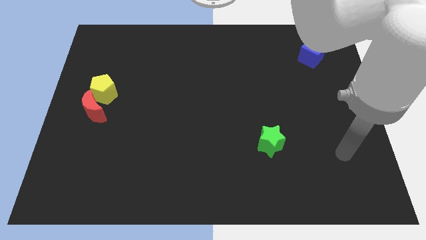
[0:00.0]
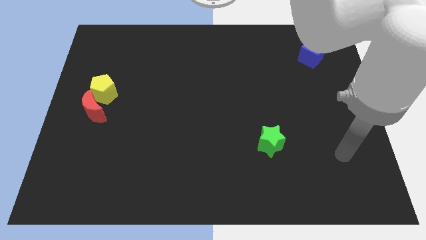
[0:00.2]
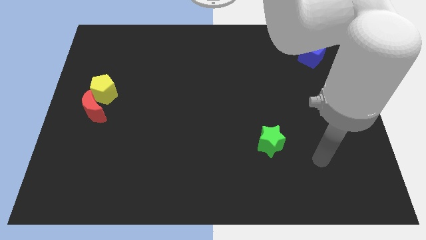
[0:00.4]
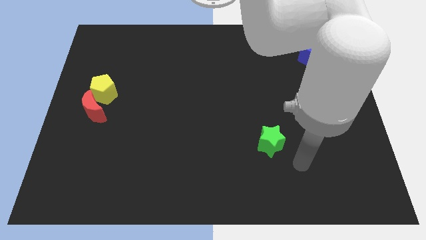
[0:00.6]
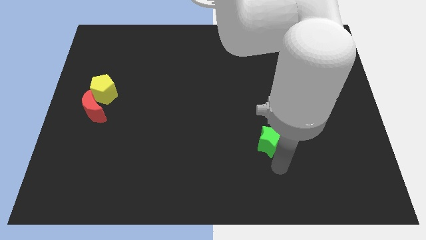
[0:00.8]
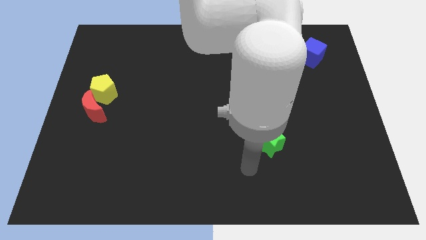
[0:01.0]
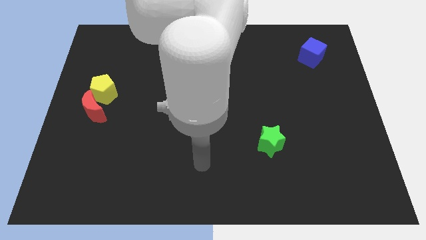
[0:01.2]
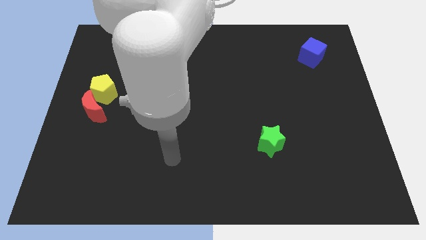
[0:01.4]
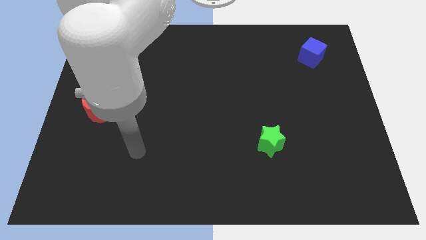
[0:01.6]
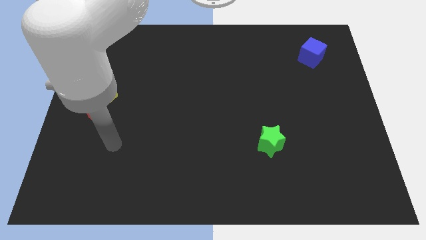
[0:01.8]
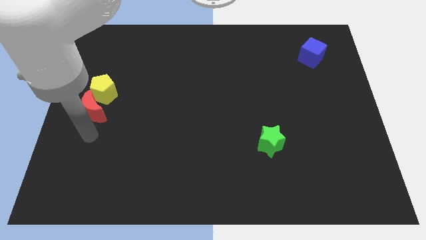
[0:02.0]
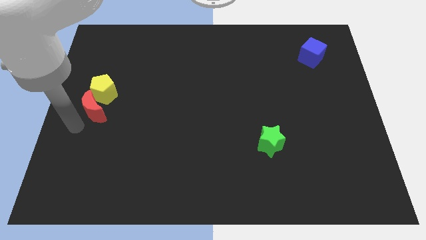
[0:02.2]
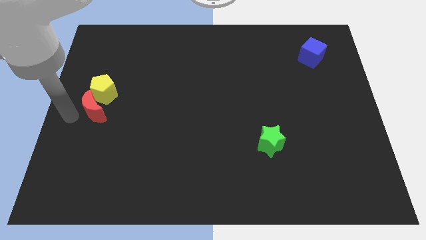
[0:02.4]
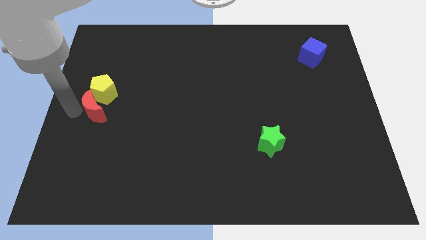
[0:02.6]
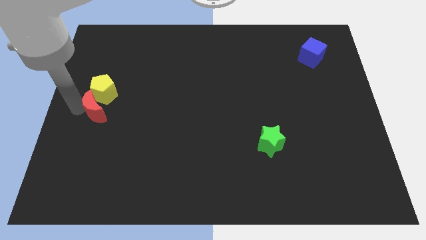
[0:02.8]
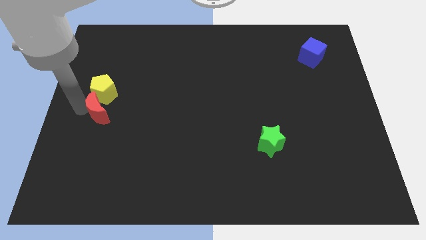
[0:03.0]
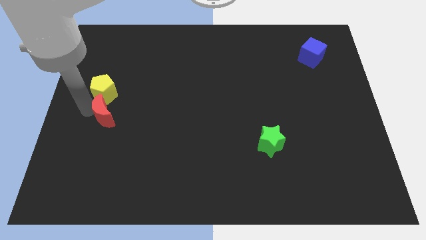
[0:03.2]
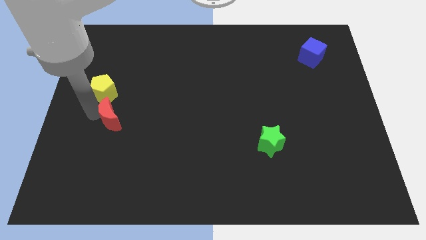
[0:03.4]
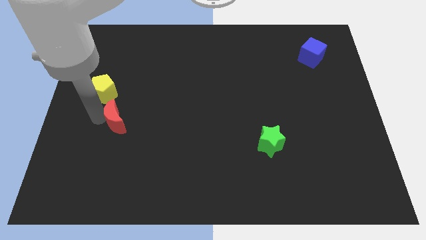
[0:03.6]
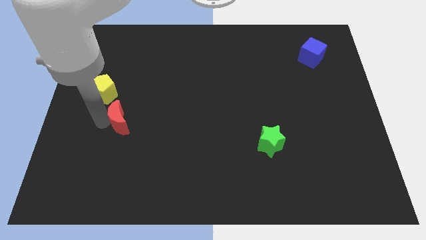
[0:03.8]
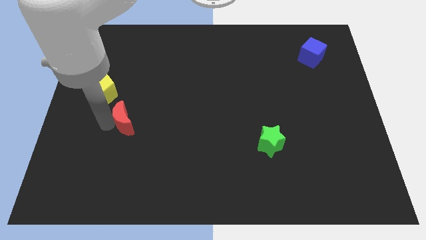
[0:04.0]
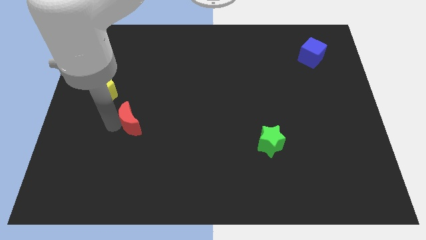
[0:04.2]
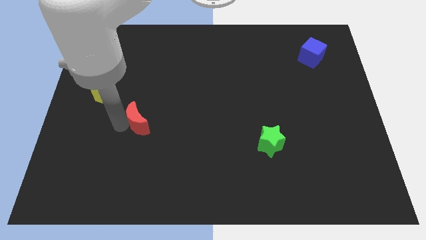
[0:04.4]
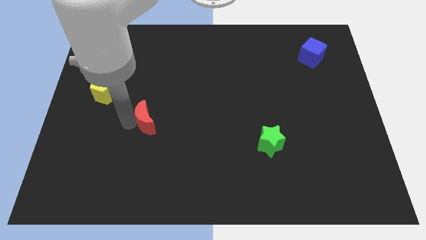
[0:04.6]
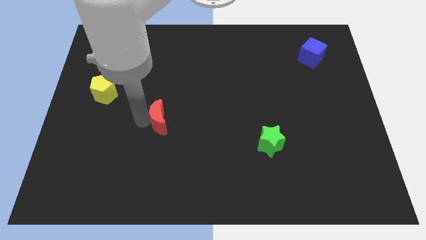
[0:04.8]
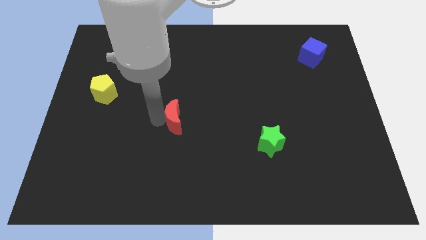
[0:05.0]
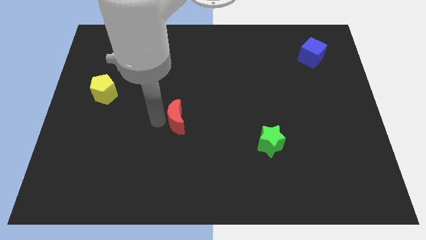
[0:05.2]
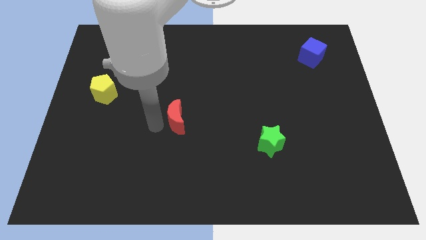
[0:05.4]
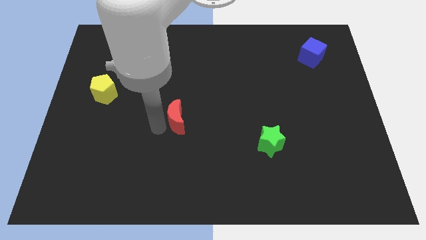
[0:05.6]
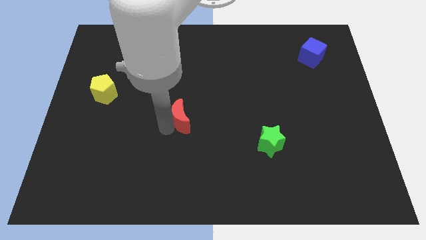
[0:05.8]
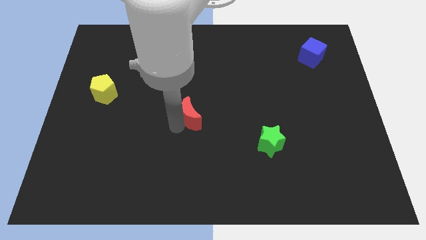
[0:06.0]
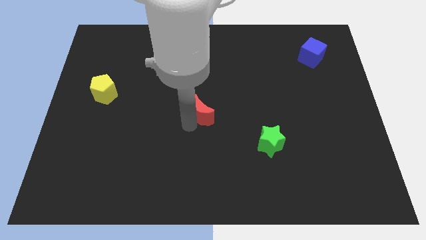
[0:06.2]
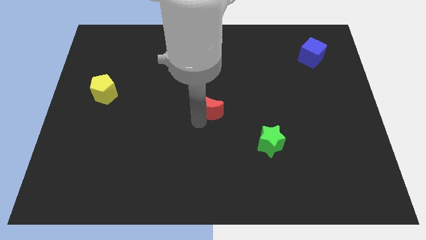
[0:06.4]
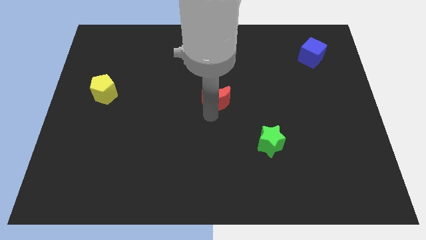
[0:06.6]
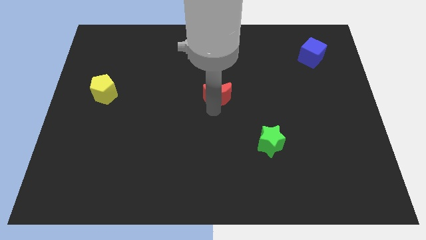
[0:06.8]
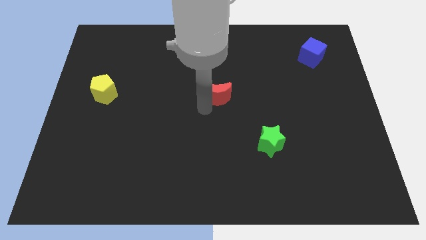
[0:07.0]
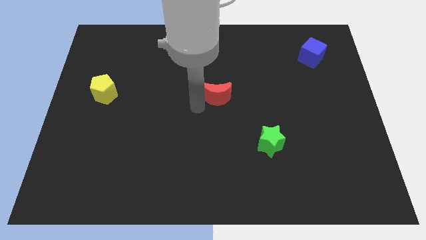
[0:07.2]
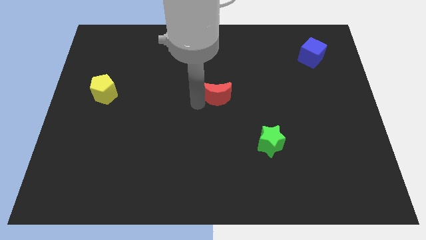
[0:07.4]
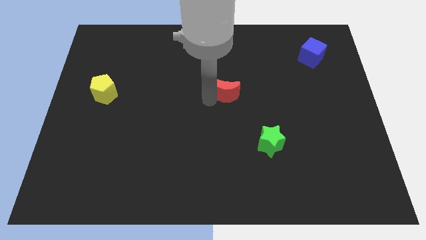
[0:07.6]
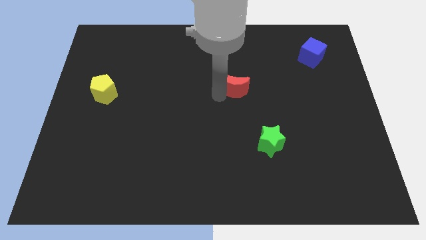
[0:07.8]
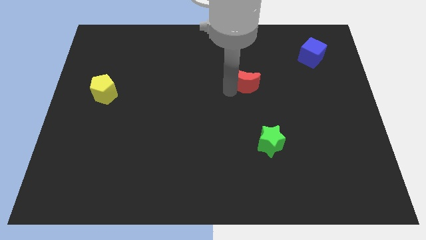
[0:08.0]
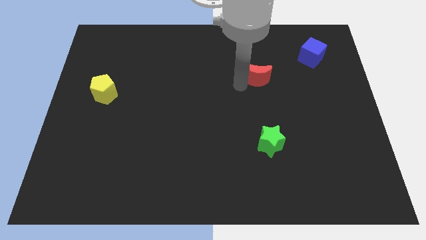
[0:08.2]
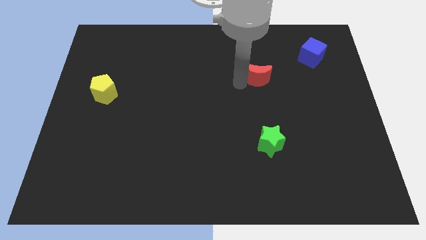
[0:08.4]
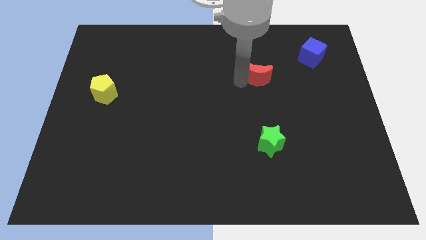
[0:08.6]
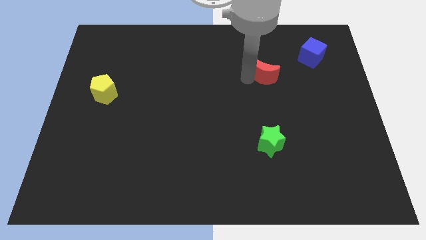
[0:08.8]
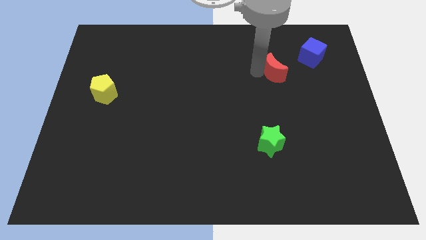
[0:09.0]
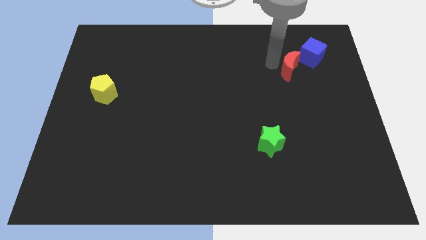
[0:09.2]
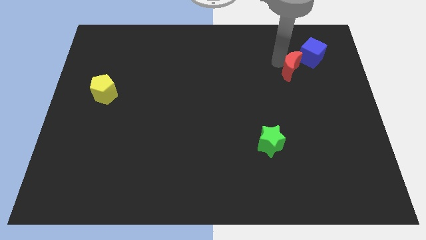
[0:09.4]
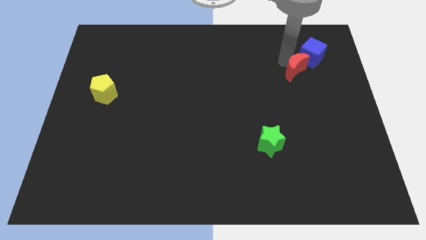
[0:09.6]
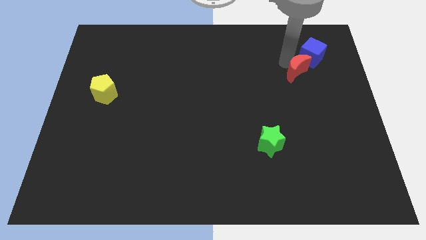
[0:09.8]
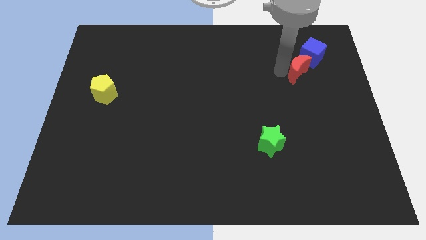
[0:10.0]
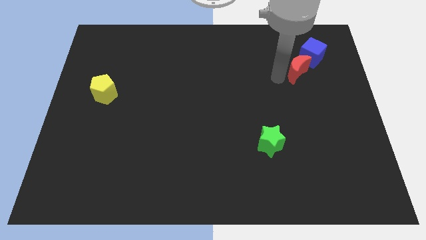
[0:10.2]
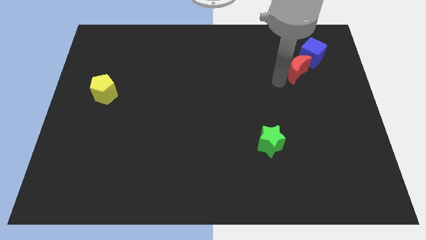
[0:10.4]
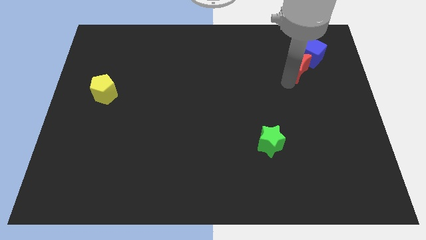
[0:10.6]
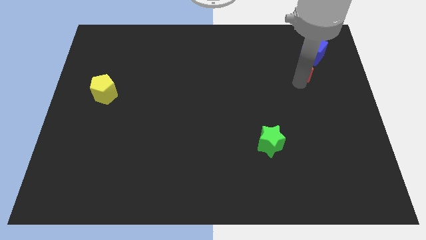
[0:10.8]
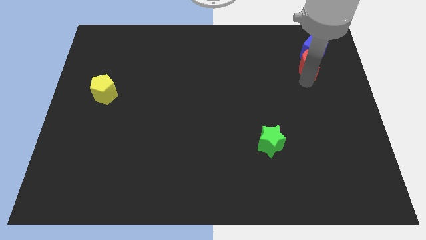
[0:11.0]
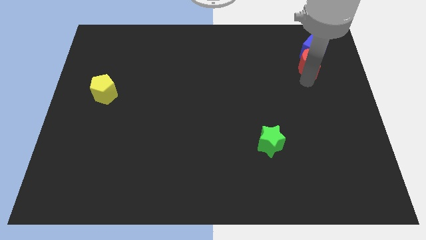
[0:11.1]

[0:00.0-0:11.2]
put the red block next to the blue block

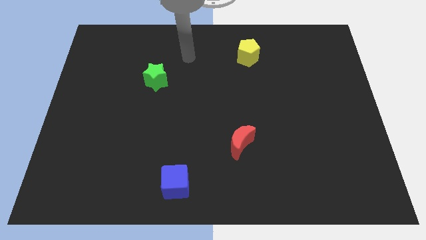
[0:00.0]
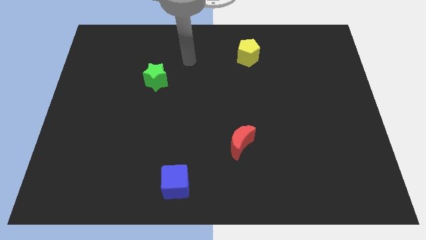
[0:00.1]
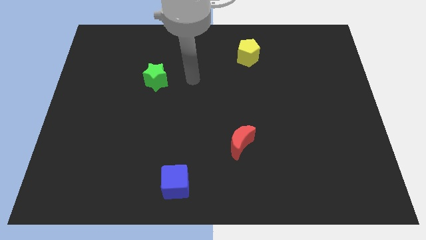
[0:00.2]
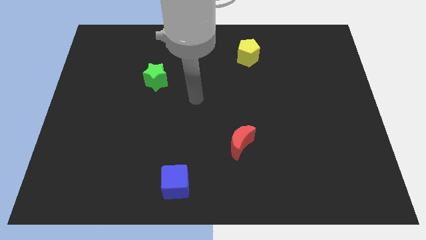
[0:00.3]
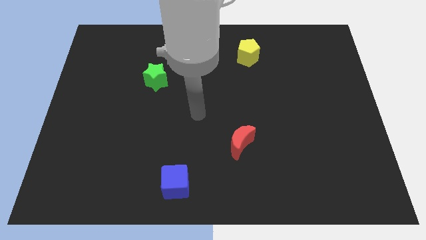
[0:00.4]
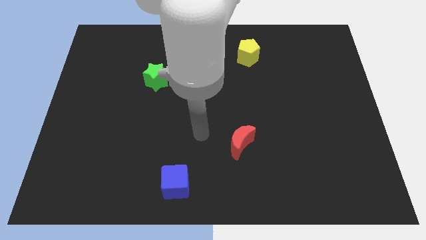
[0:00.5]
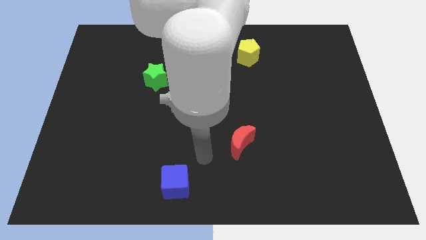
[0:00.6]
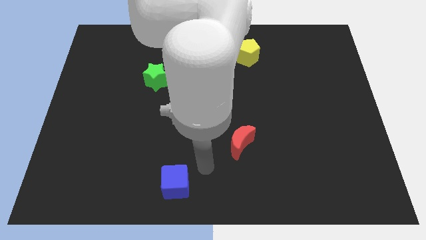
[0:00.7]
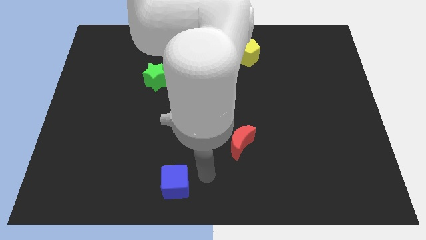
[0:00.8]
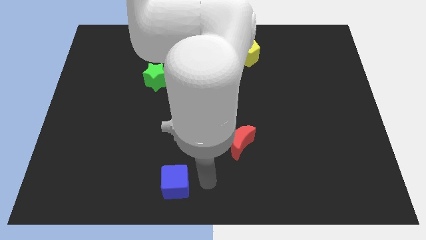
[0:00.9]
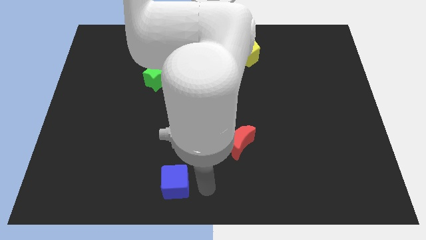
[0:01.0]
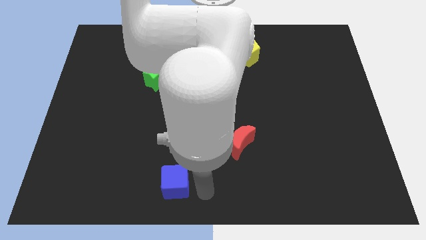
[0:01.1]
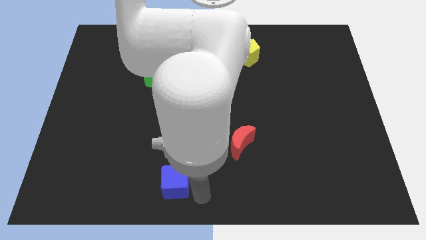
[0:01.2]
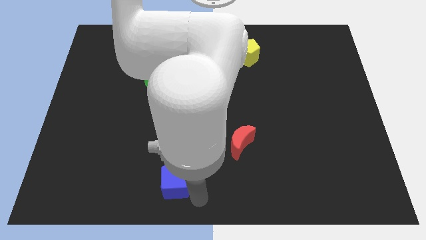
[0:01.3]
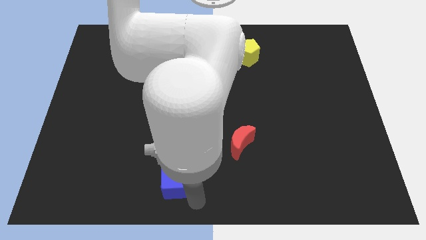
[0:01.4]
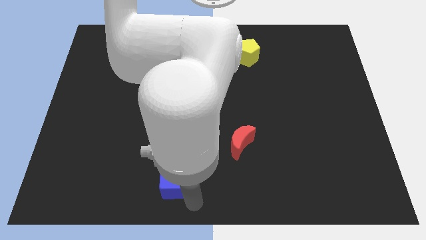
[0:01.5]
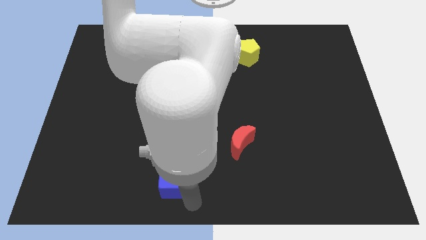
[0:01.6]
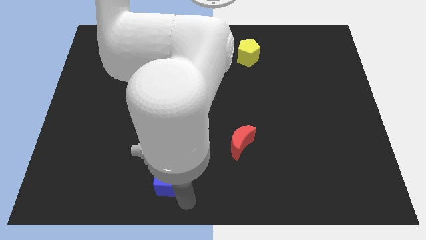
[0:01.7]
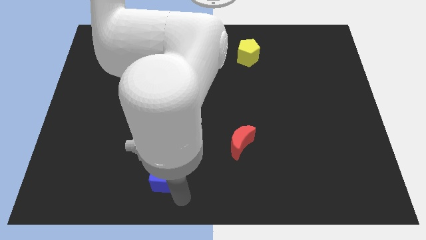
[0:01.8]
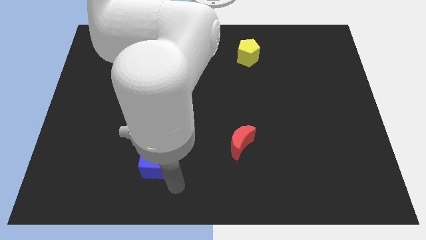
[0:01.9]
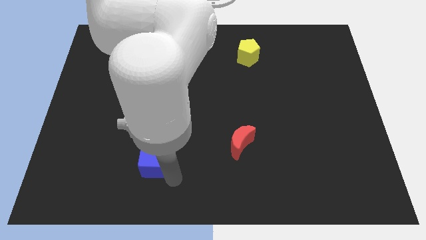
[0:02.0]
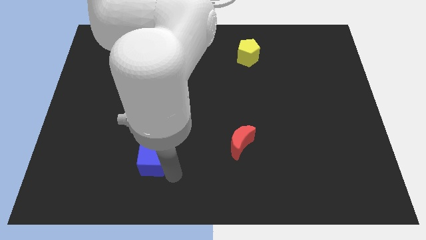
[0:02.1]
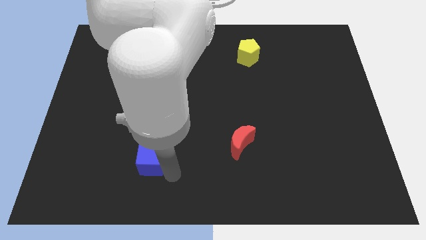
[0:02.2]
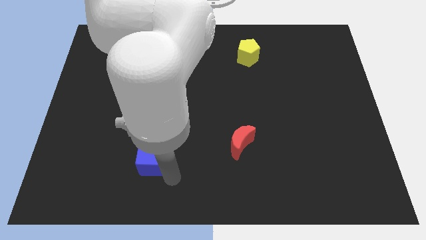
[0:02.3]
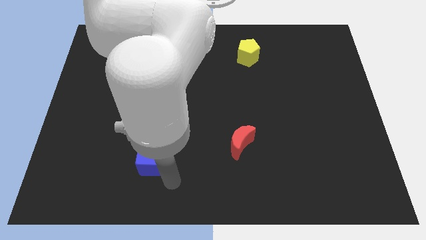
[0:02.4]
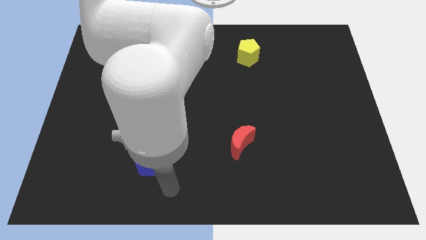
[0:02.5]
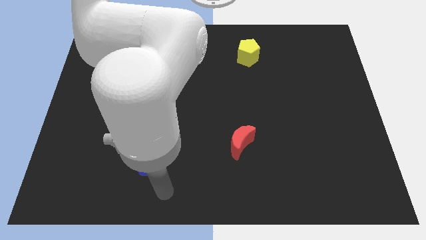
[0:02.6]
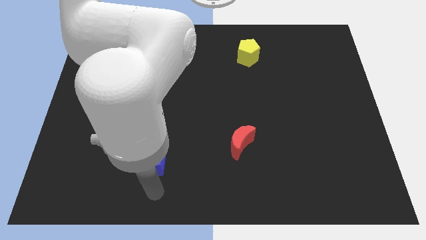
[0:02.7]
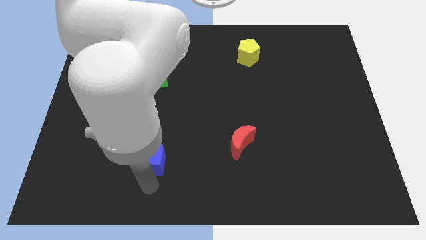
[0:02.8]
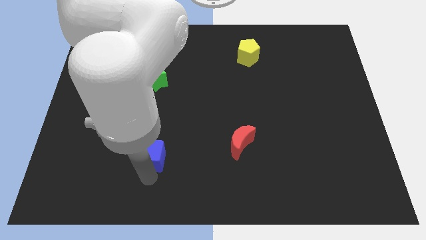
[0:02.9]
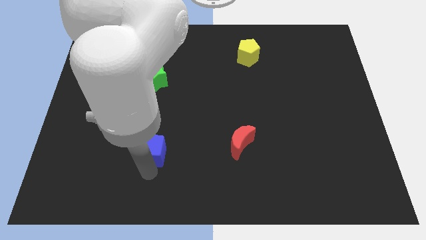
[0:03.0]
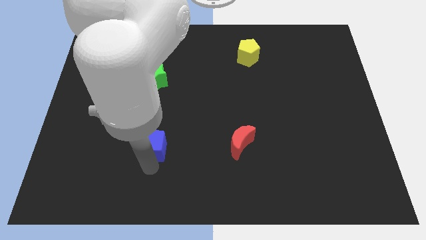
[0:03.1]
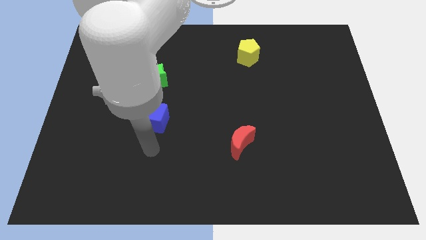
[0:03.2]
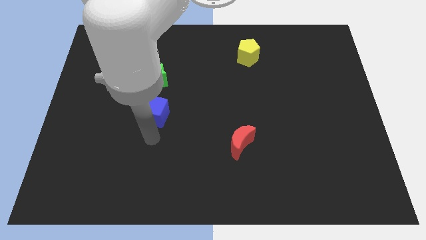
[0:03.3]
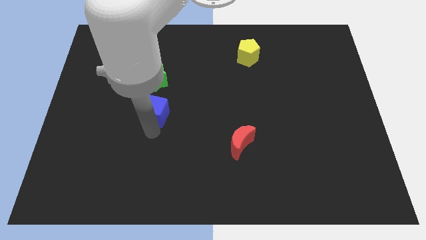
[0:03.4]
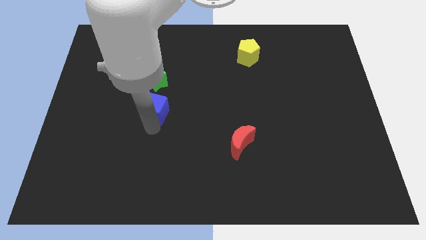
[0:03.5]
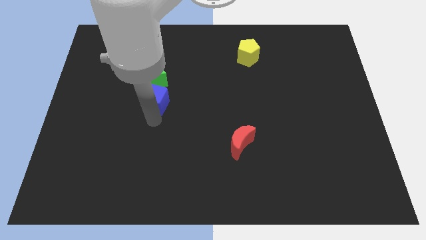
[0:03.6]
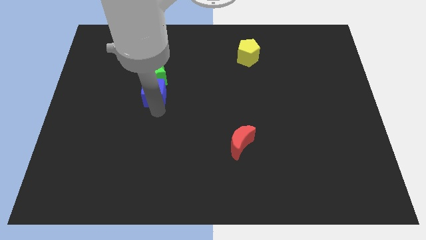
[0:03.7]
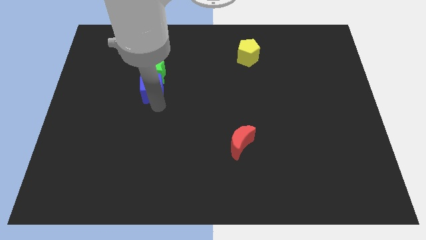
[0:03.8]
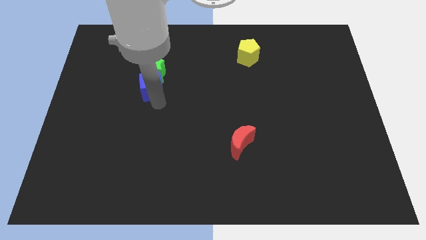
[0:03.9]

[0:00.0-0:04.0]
move the blue block close to the green star
